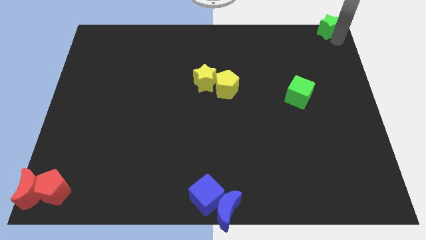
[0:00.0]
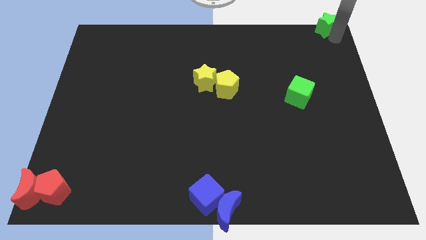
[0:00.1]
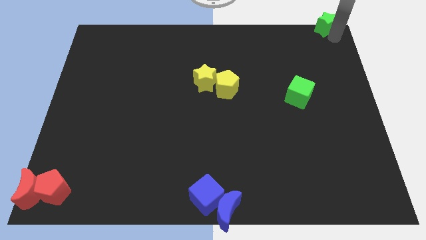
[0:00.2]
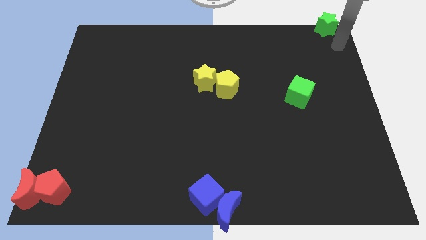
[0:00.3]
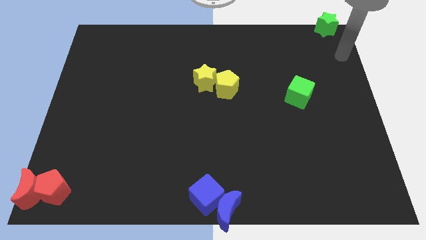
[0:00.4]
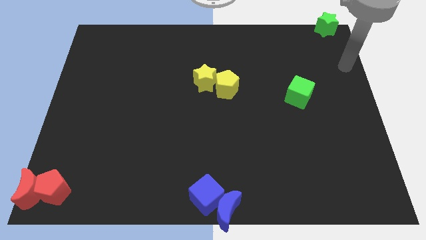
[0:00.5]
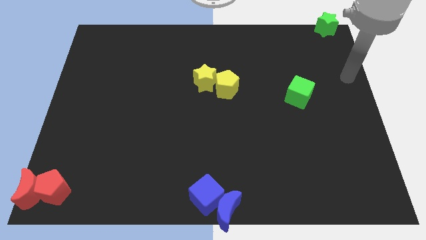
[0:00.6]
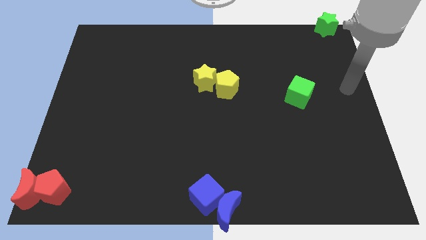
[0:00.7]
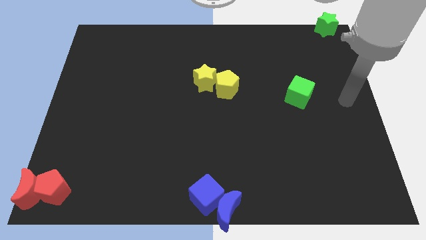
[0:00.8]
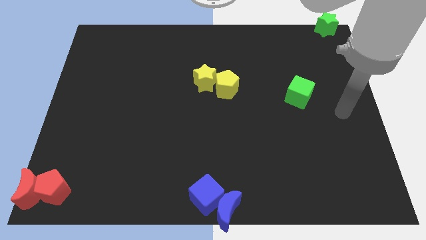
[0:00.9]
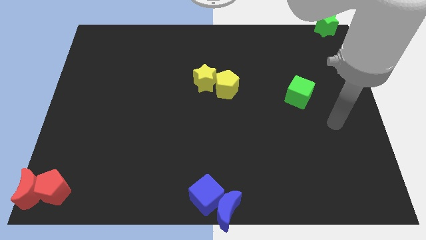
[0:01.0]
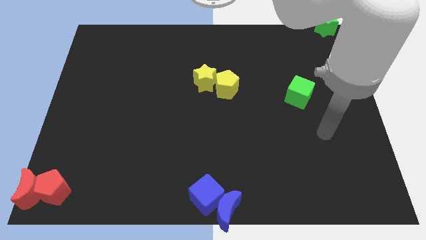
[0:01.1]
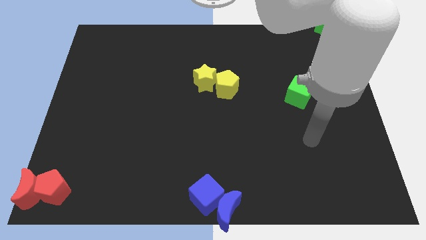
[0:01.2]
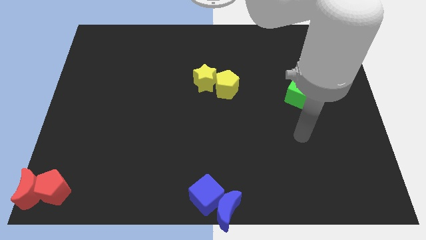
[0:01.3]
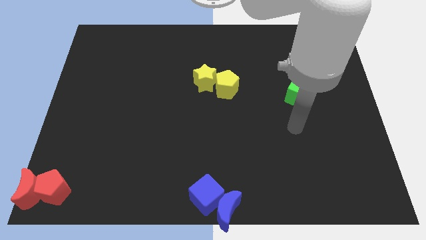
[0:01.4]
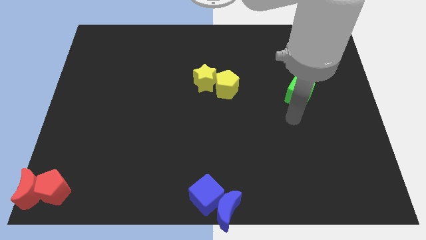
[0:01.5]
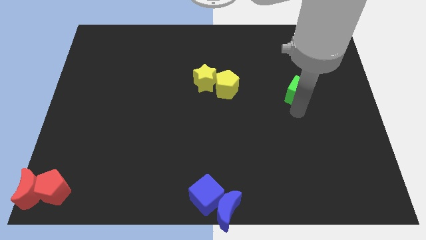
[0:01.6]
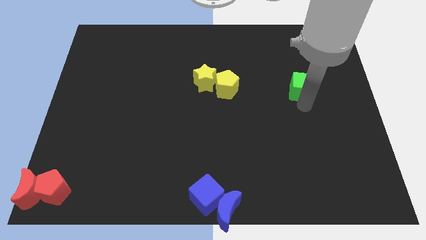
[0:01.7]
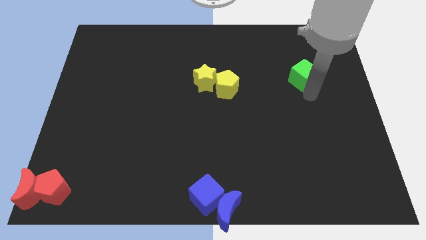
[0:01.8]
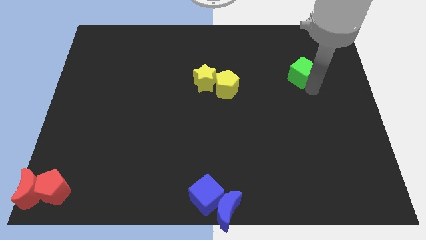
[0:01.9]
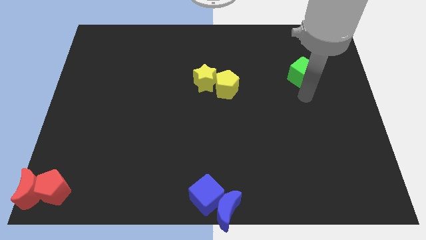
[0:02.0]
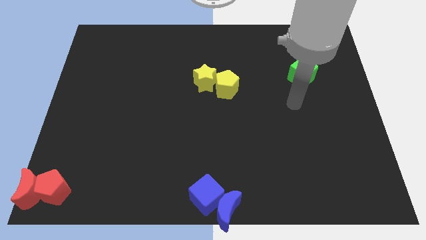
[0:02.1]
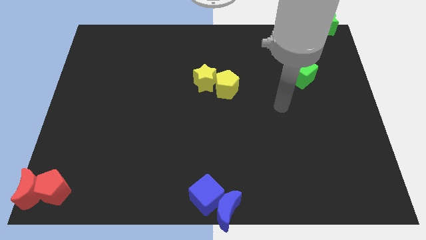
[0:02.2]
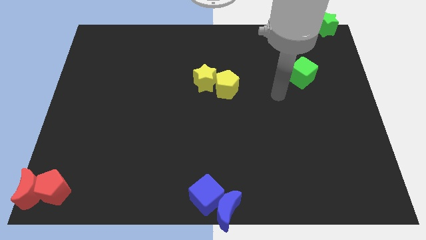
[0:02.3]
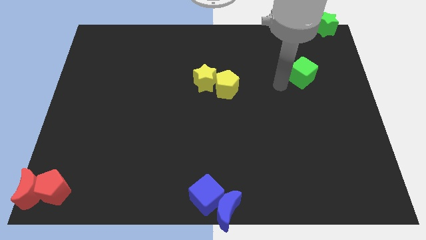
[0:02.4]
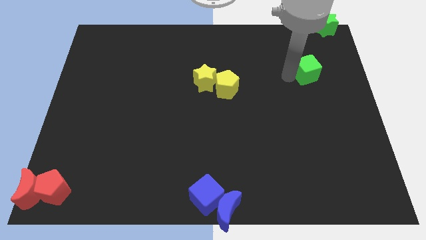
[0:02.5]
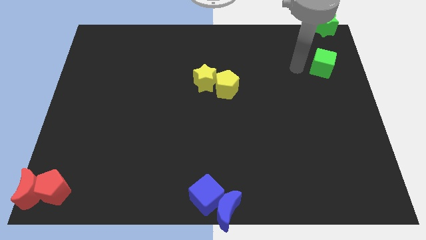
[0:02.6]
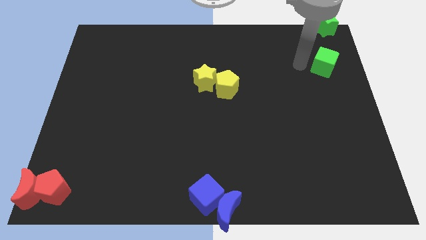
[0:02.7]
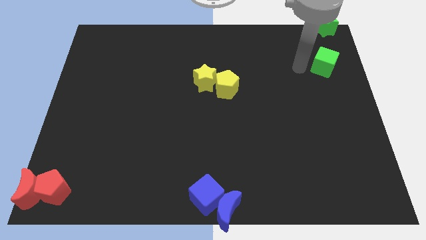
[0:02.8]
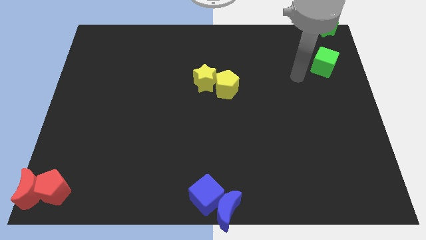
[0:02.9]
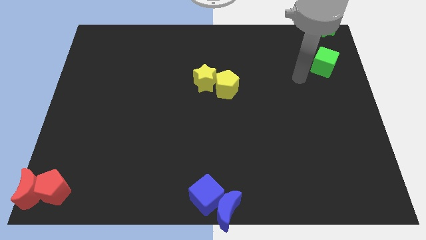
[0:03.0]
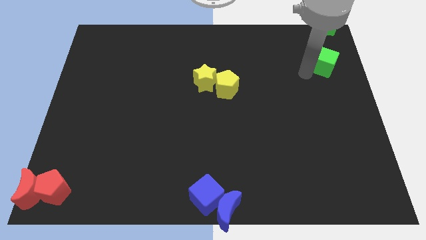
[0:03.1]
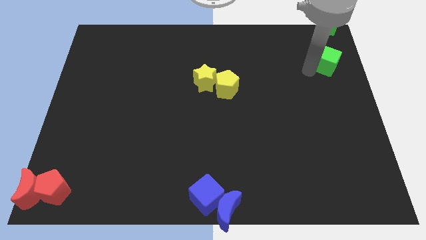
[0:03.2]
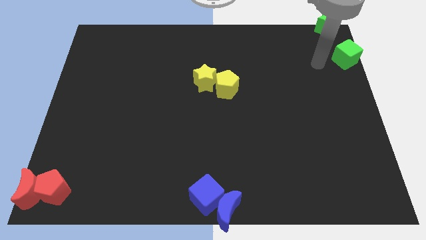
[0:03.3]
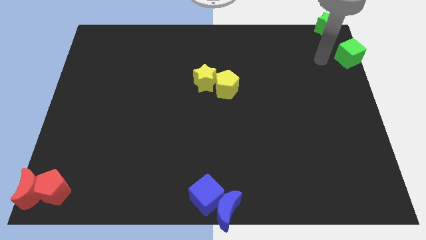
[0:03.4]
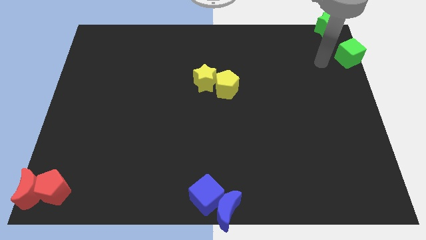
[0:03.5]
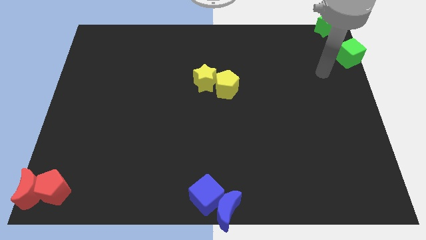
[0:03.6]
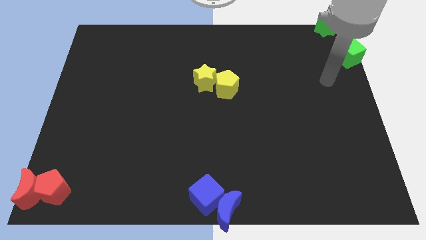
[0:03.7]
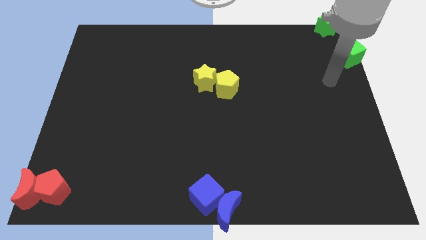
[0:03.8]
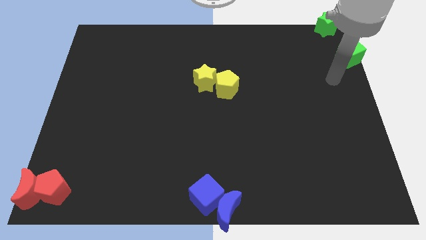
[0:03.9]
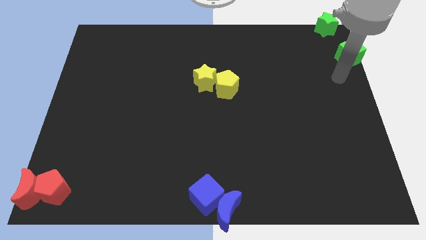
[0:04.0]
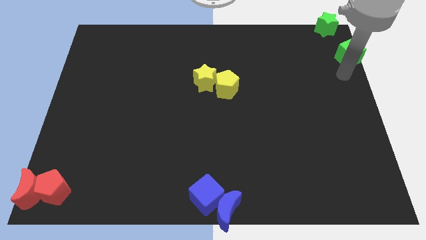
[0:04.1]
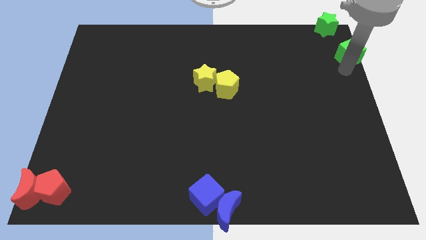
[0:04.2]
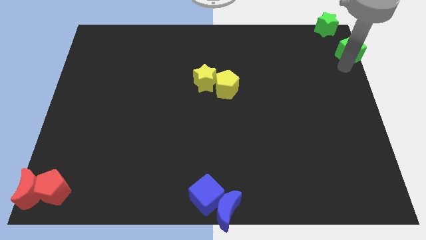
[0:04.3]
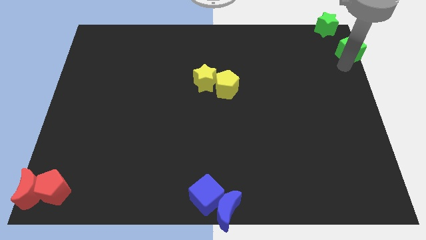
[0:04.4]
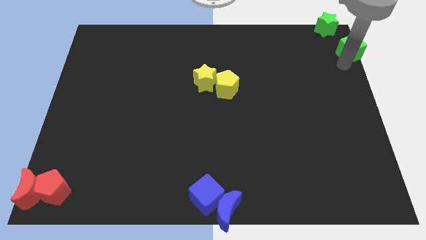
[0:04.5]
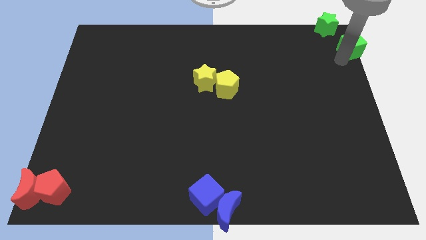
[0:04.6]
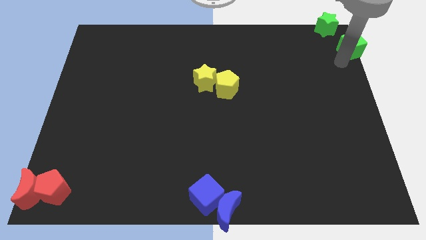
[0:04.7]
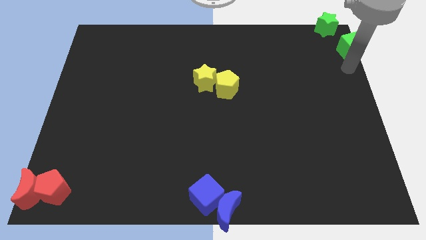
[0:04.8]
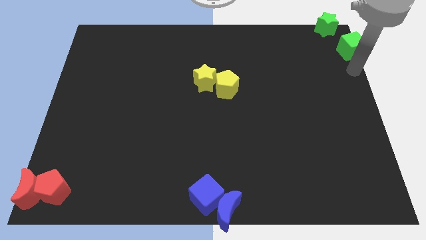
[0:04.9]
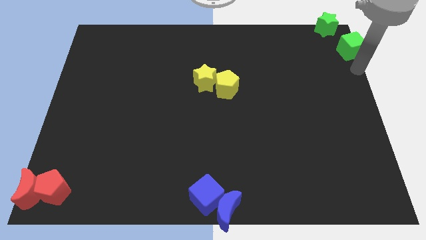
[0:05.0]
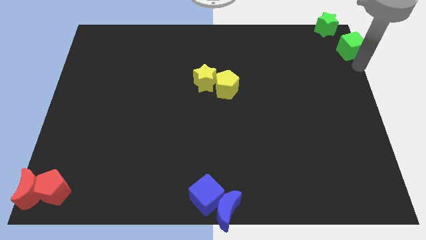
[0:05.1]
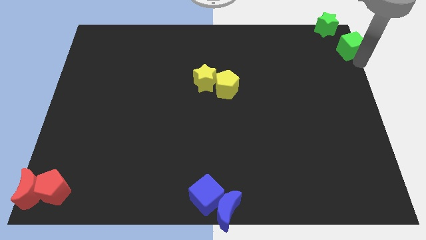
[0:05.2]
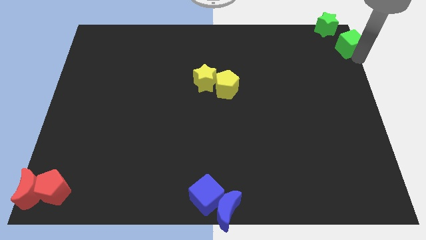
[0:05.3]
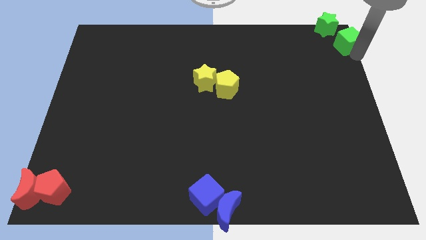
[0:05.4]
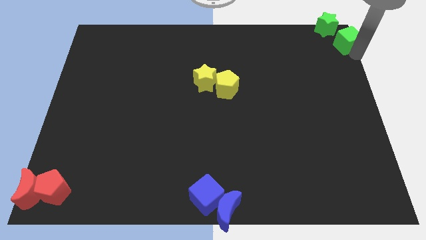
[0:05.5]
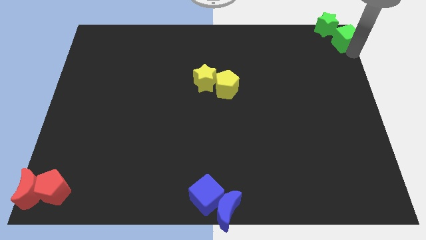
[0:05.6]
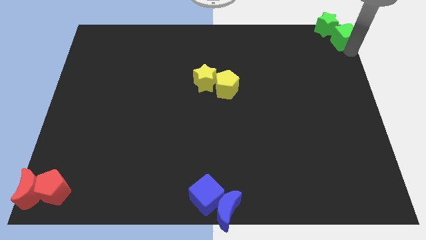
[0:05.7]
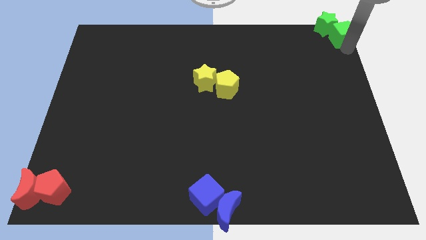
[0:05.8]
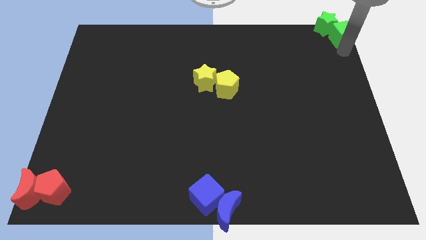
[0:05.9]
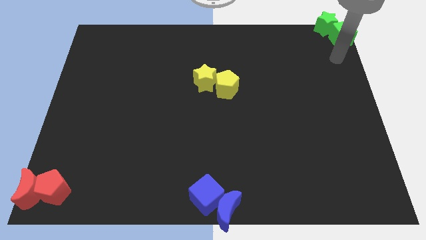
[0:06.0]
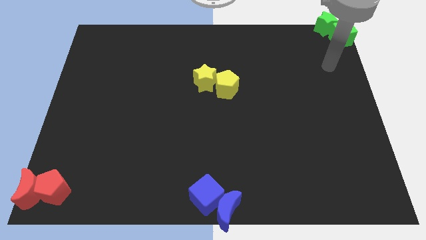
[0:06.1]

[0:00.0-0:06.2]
place the green cube near the green star

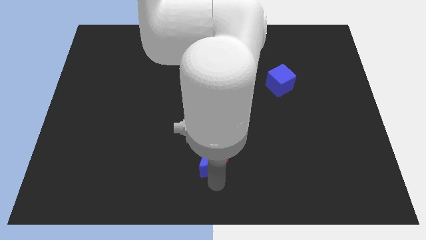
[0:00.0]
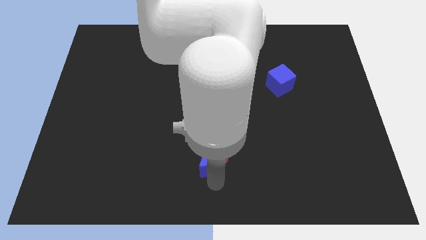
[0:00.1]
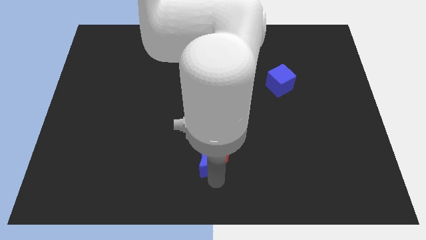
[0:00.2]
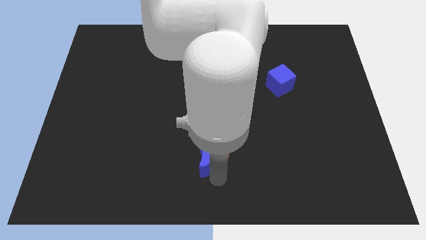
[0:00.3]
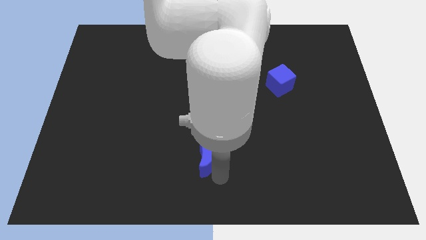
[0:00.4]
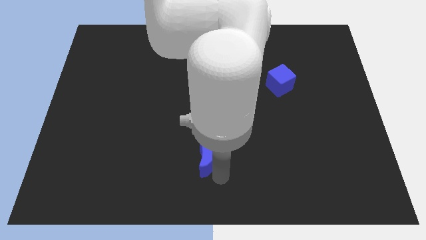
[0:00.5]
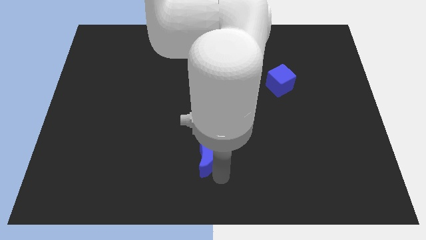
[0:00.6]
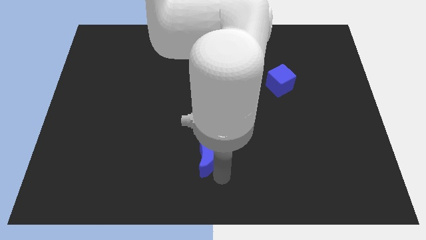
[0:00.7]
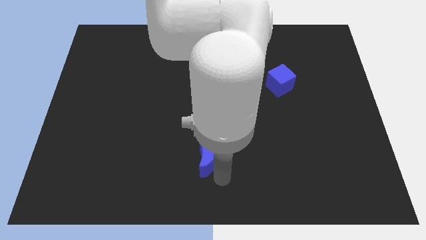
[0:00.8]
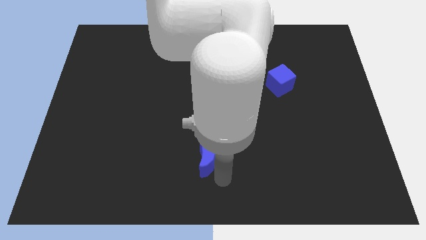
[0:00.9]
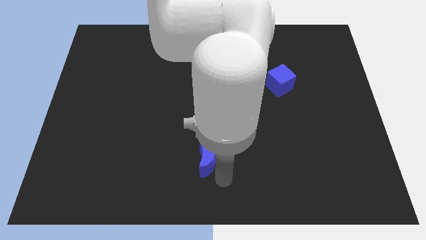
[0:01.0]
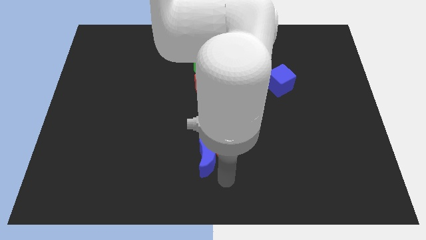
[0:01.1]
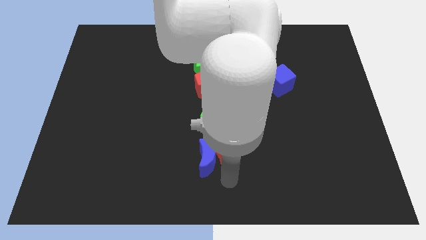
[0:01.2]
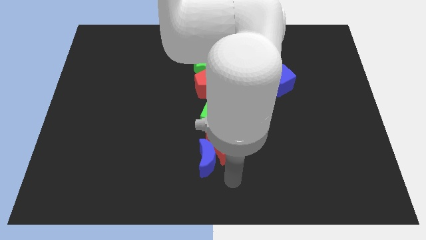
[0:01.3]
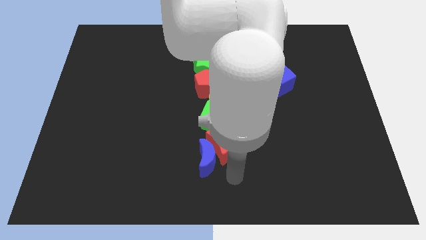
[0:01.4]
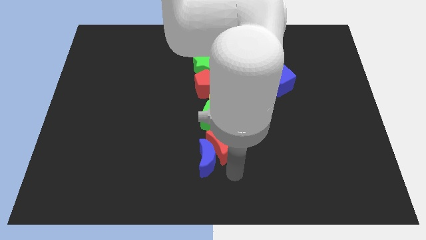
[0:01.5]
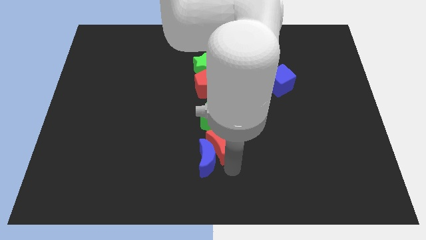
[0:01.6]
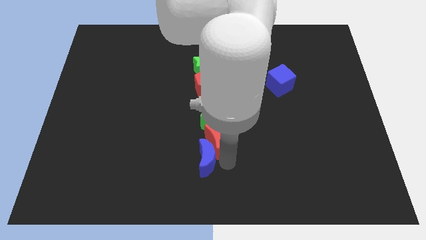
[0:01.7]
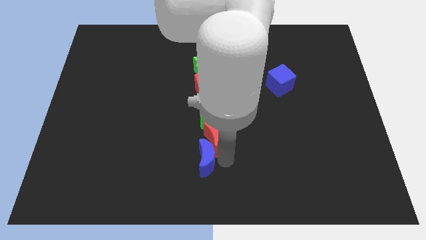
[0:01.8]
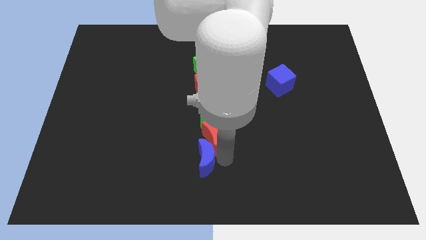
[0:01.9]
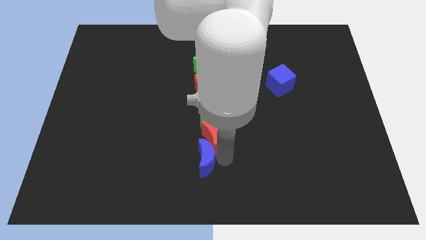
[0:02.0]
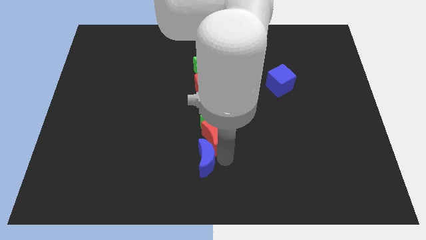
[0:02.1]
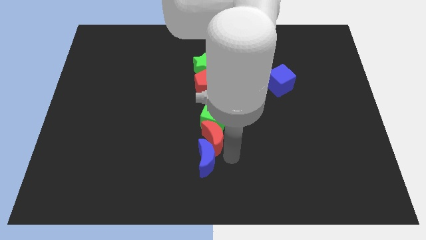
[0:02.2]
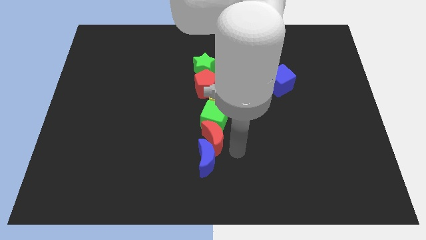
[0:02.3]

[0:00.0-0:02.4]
push the red moon into the green cube

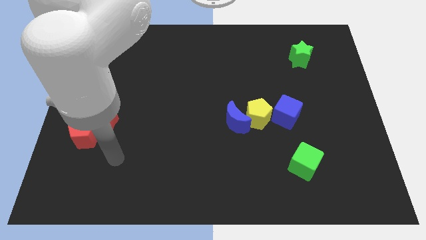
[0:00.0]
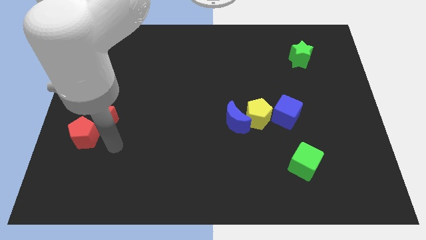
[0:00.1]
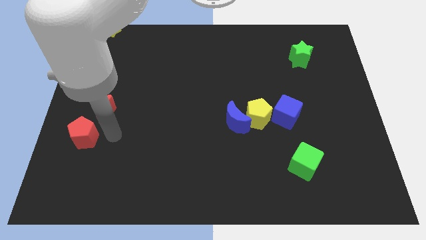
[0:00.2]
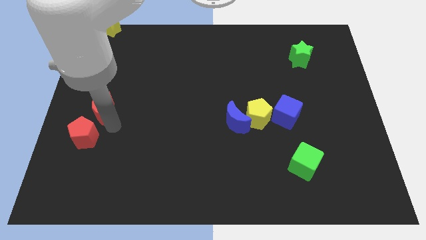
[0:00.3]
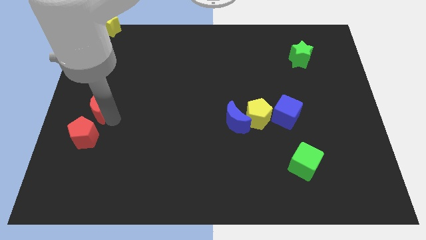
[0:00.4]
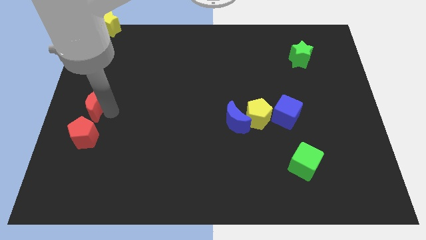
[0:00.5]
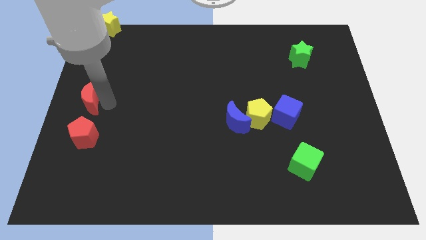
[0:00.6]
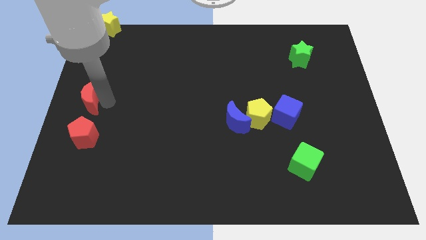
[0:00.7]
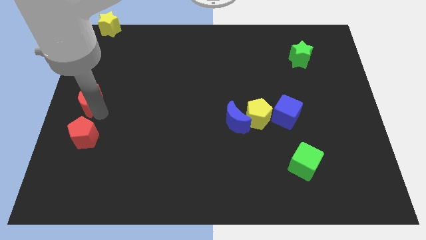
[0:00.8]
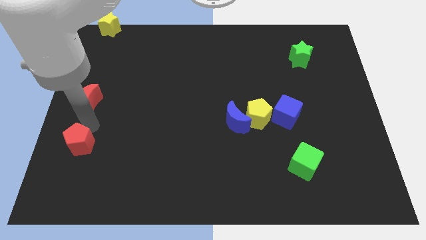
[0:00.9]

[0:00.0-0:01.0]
push red crescent above red pentagon
